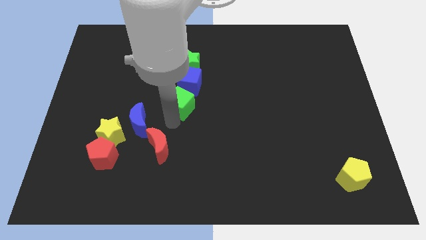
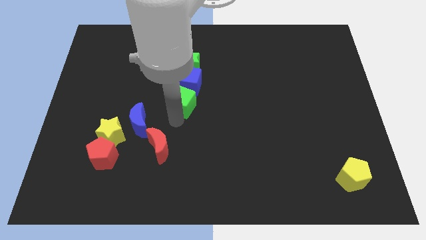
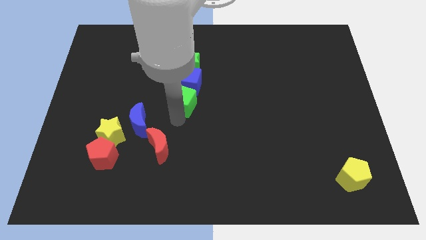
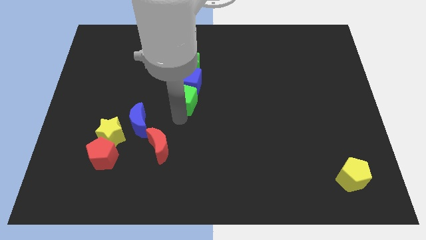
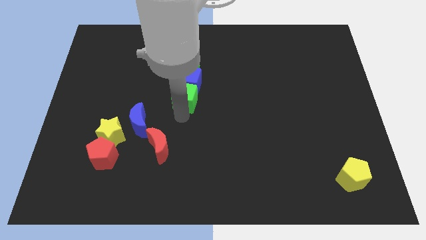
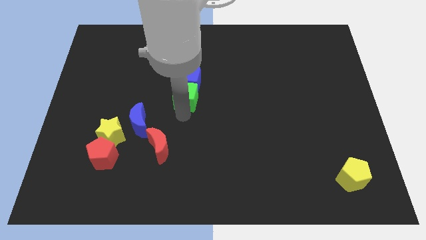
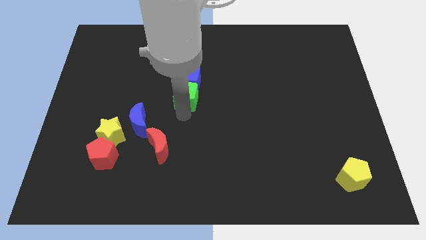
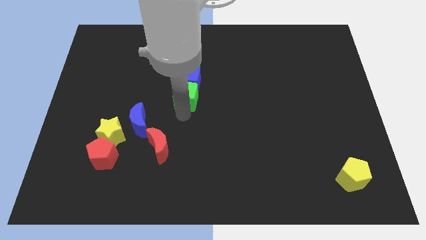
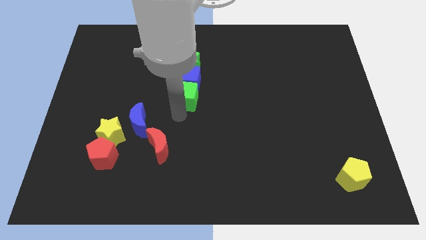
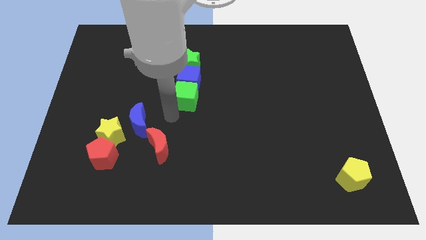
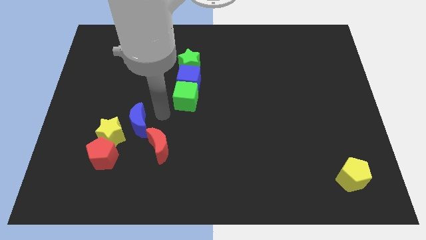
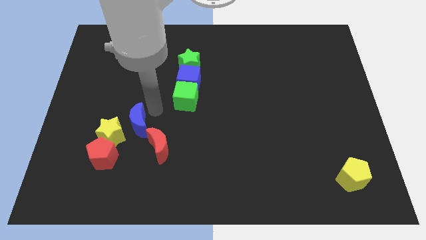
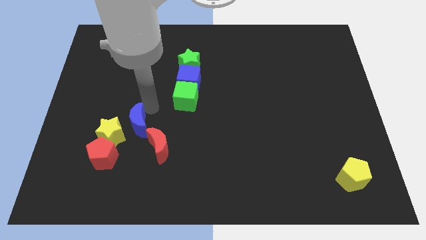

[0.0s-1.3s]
move green cube into blue cube

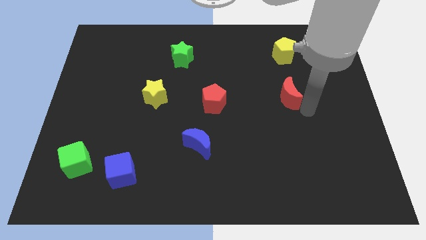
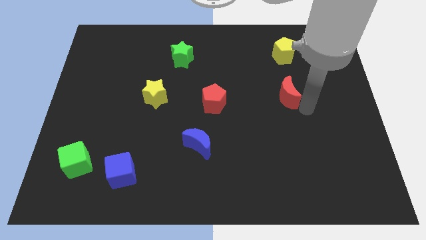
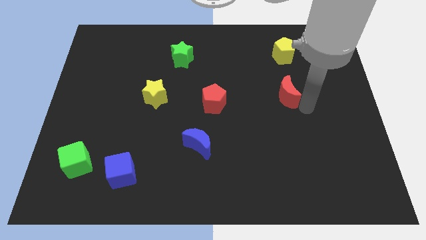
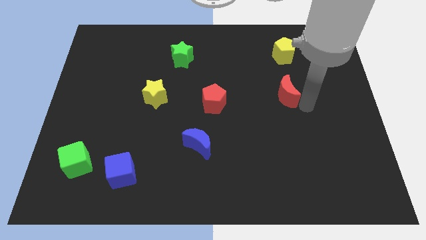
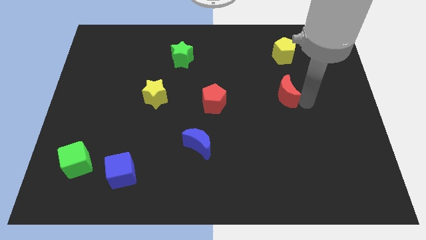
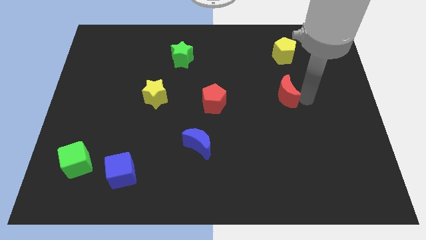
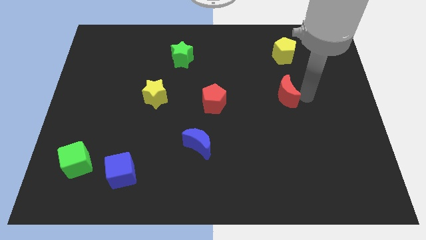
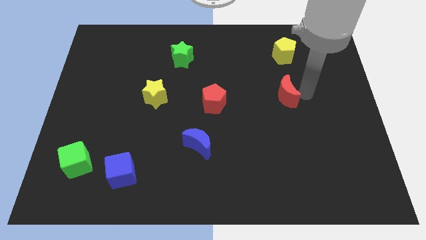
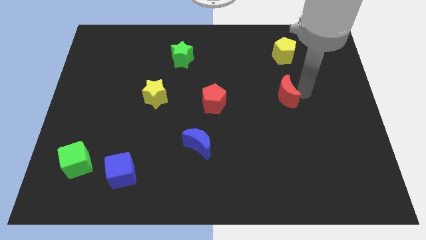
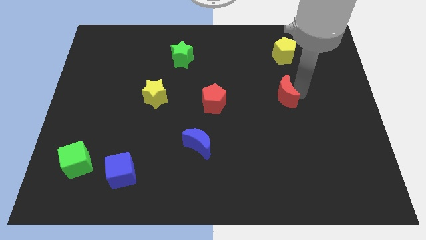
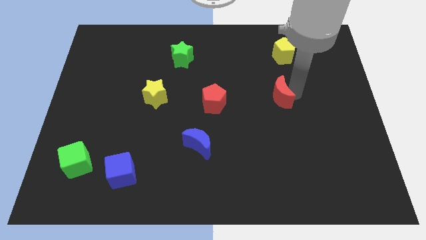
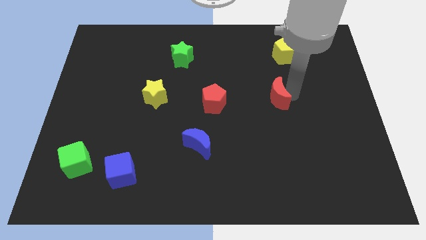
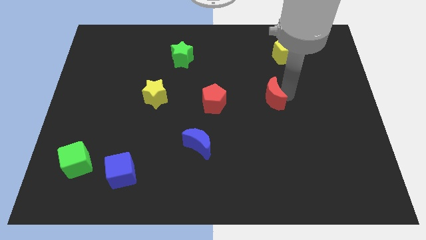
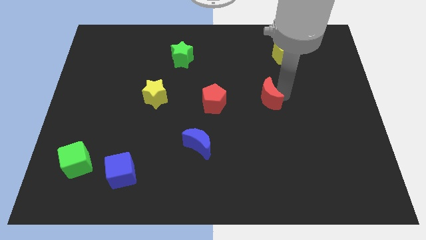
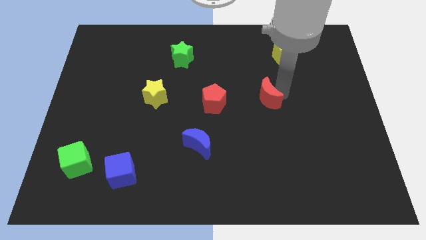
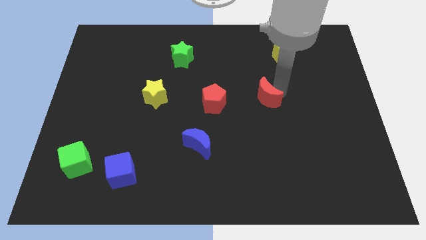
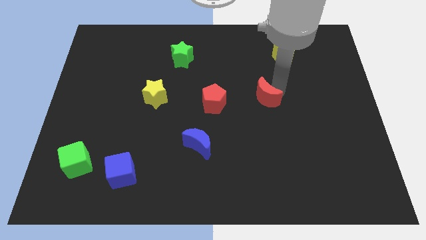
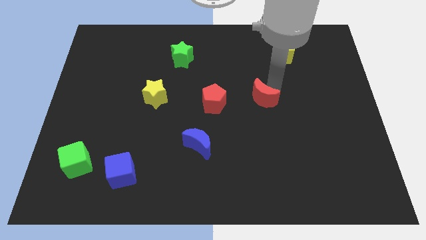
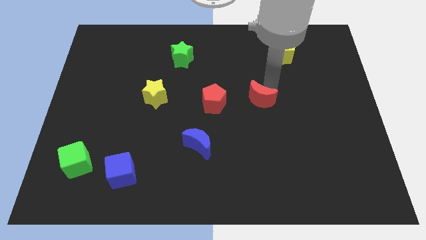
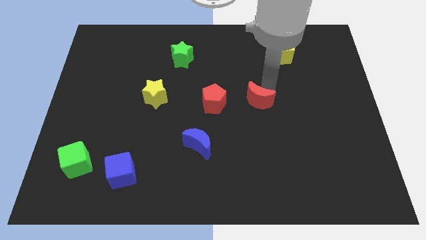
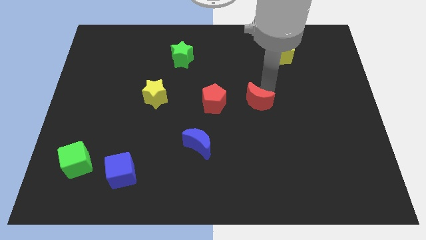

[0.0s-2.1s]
move the red crescent to the bottom left of the yellow pentagon

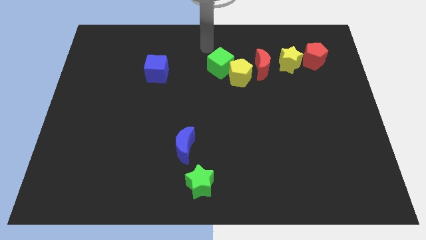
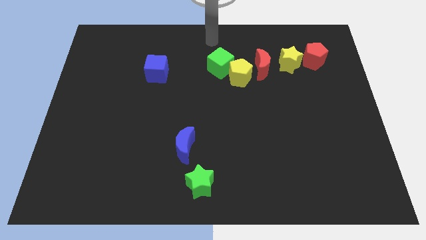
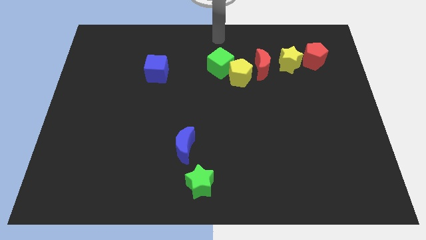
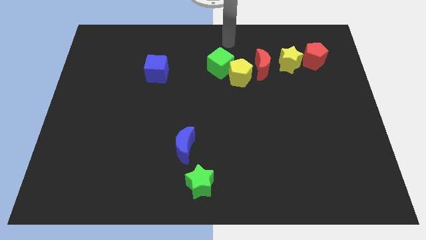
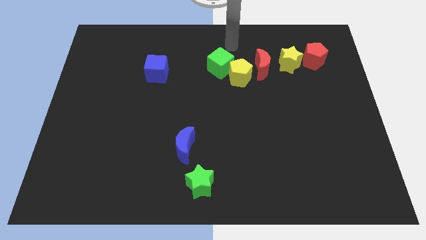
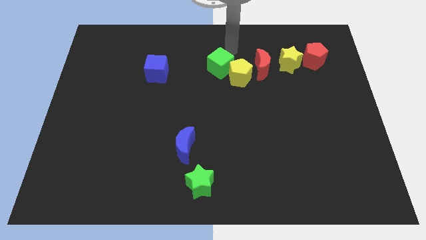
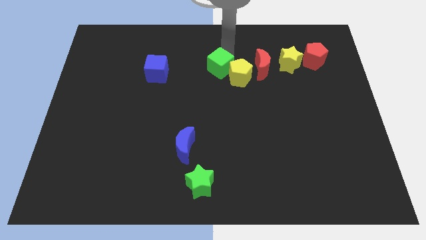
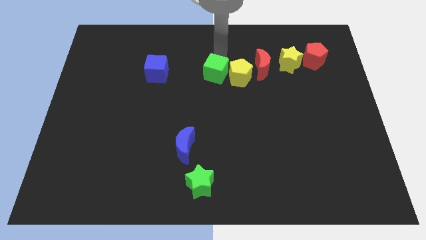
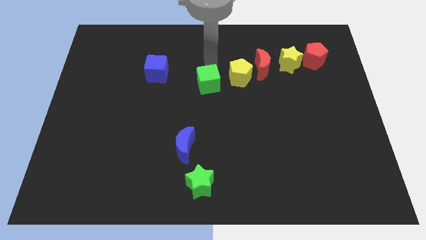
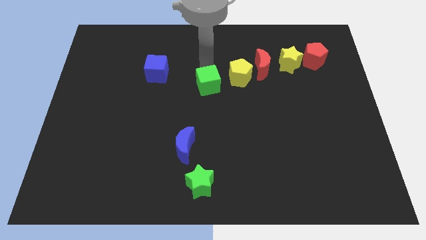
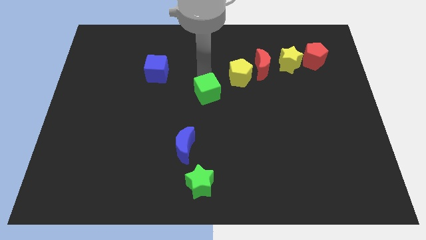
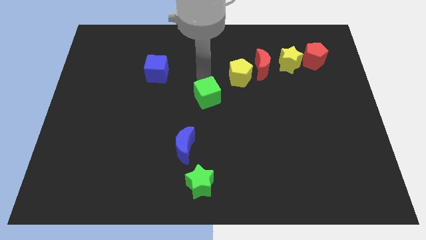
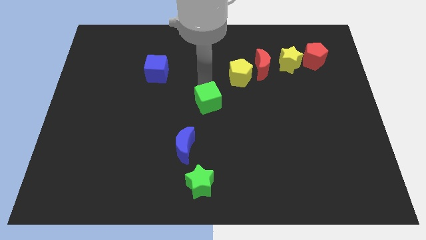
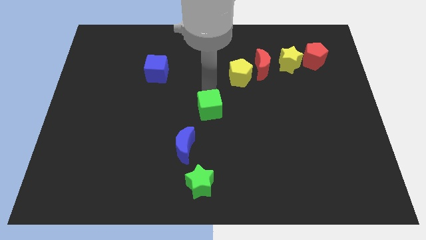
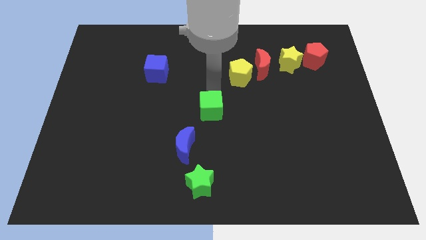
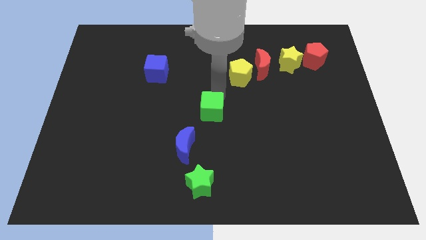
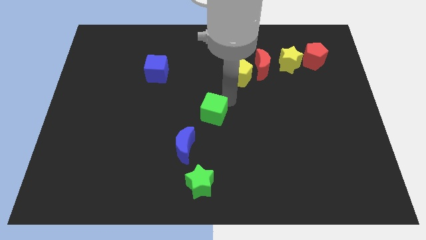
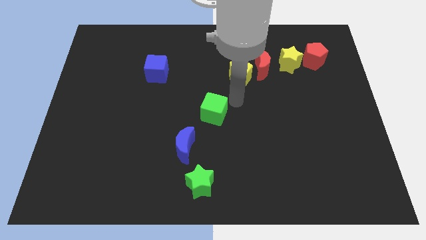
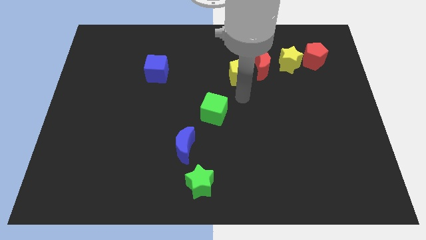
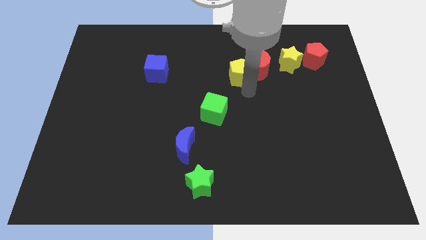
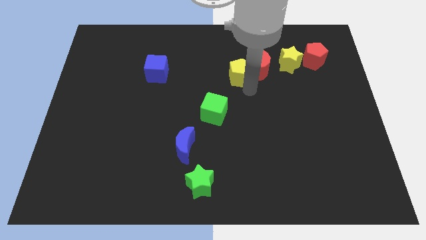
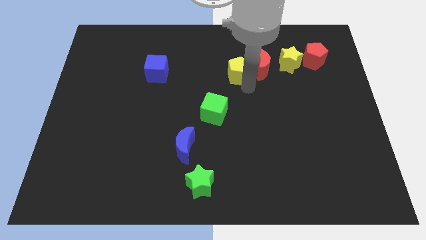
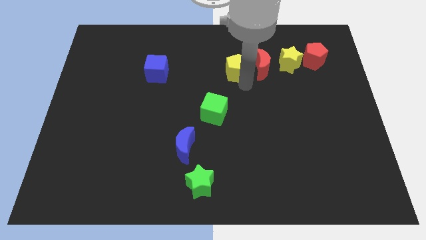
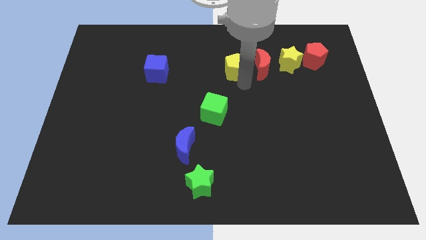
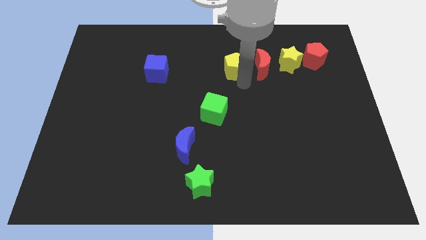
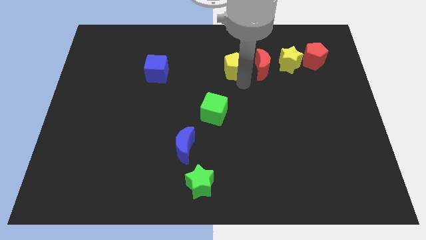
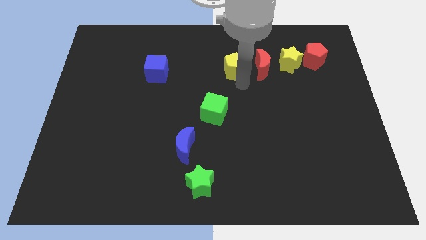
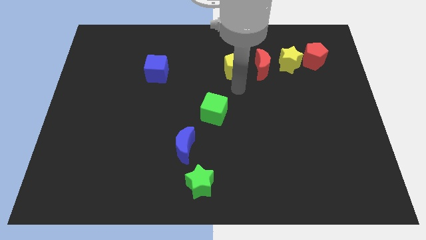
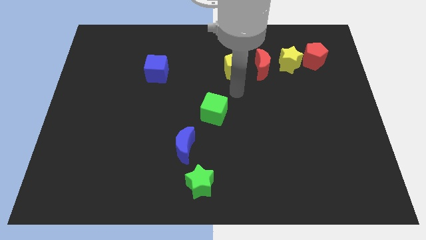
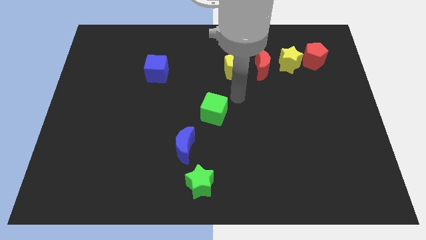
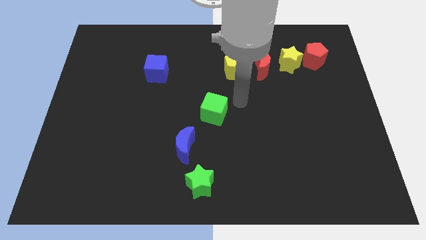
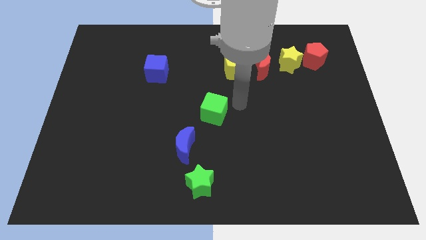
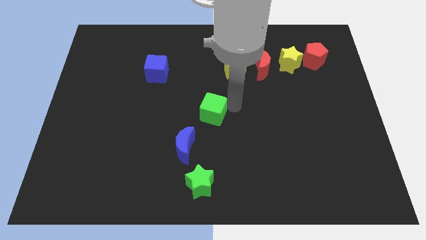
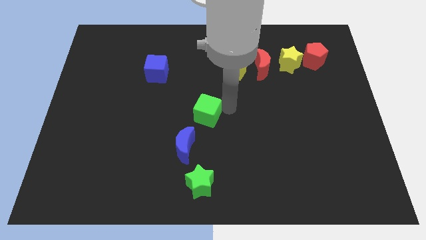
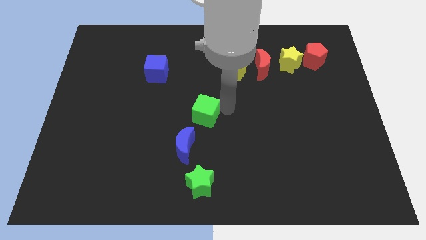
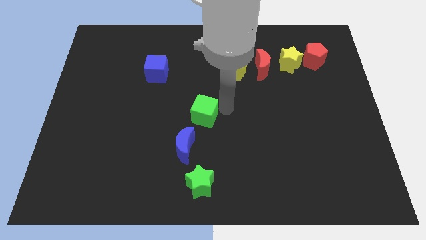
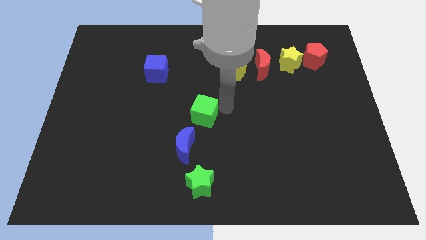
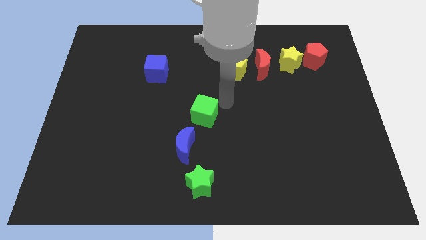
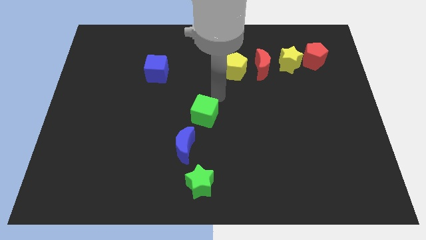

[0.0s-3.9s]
push the green cube towards the blue moon

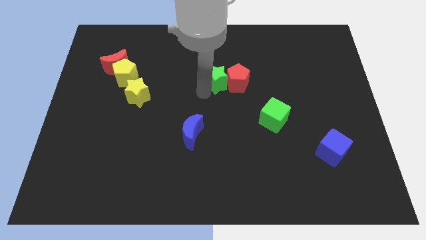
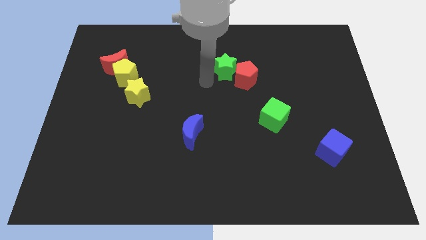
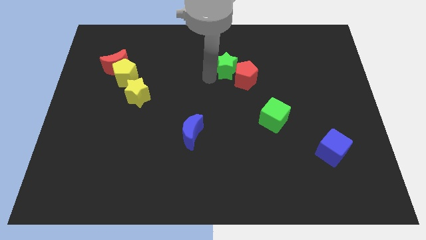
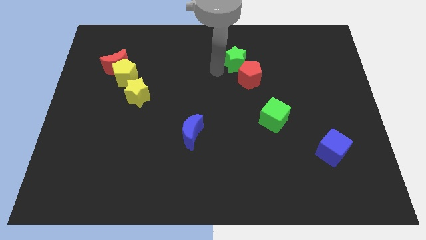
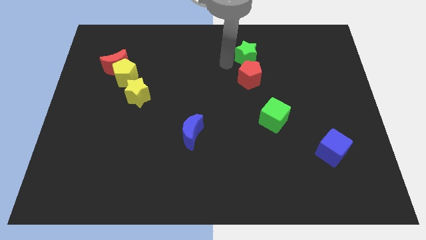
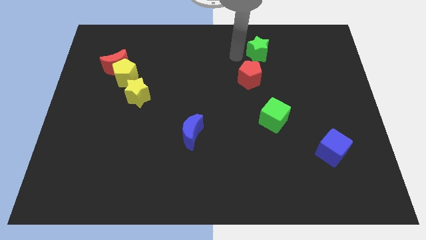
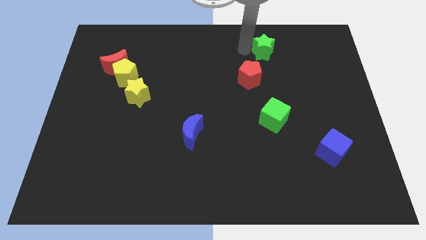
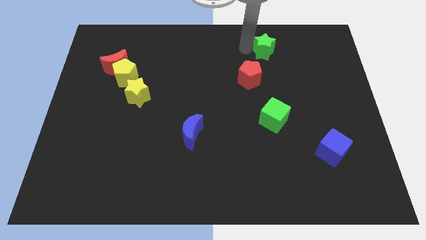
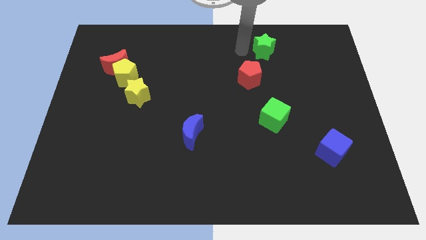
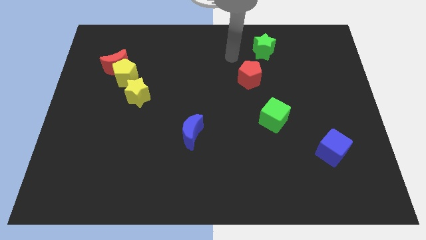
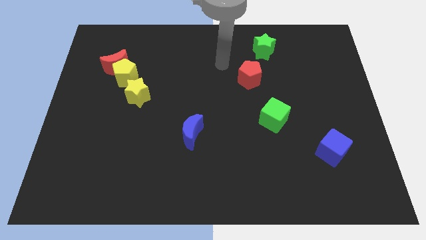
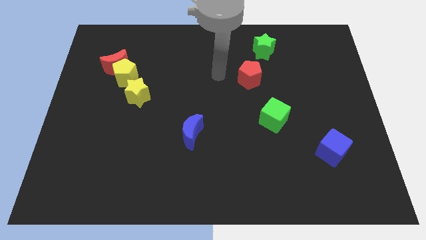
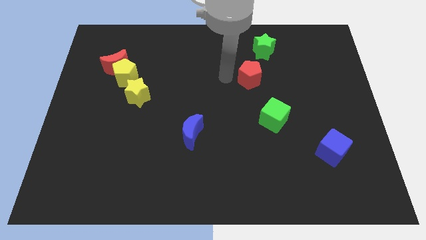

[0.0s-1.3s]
separate the green star and the red pentagon

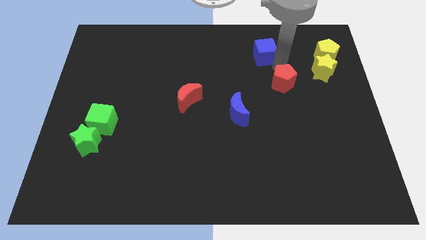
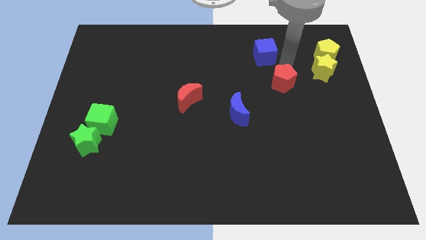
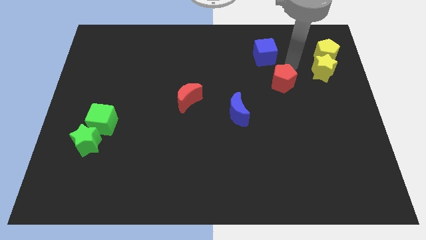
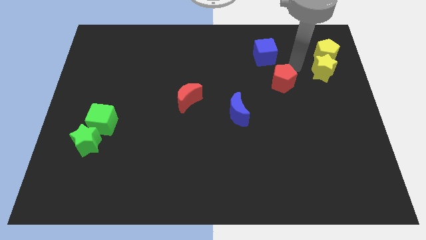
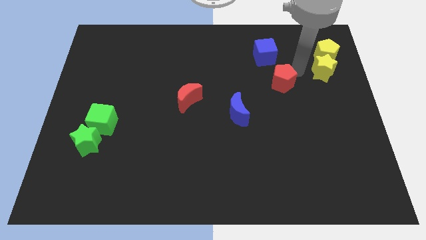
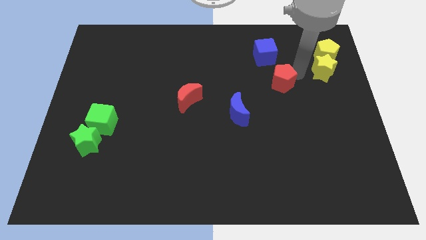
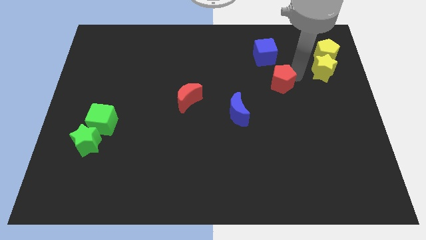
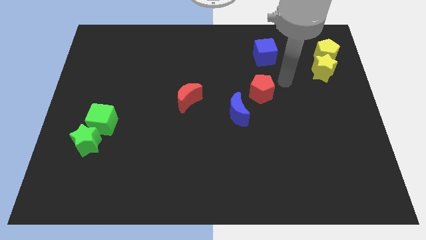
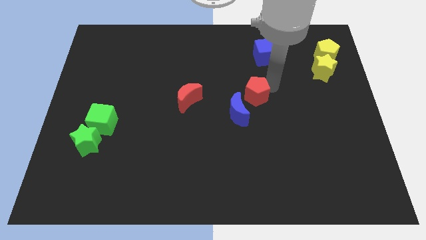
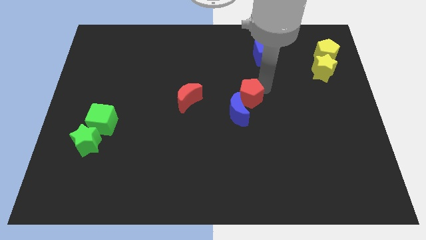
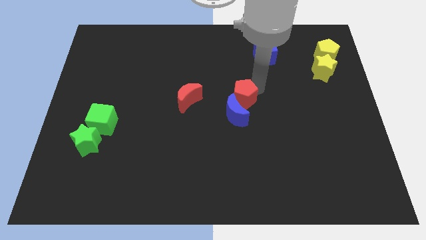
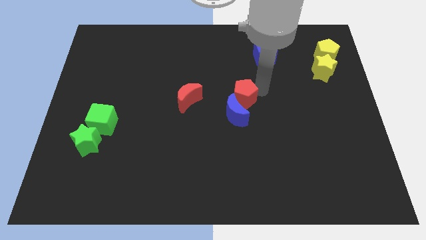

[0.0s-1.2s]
push the red pentagon into the blue moon
